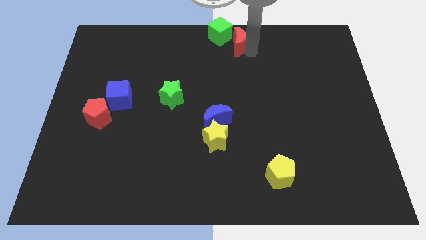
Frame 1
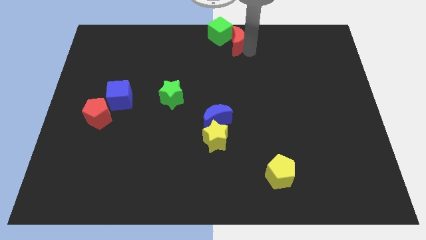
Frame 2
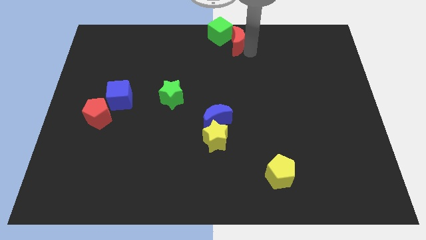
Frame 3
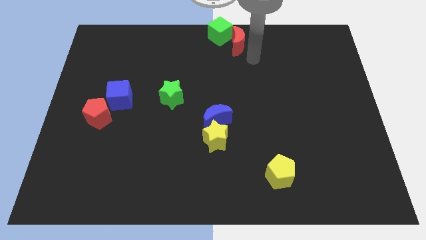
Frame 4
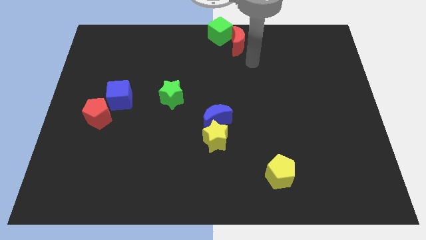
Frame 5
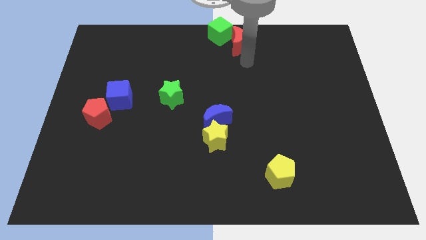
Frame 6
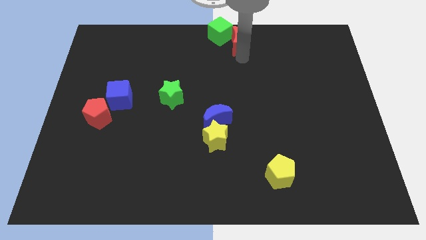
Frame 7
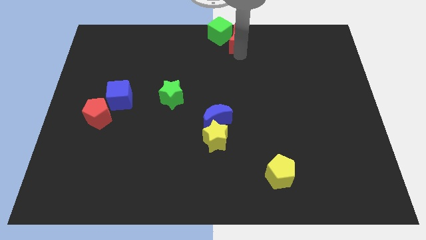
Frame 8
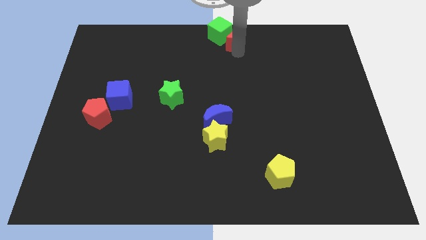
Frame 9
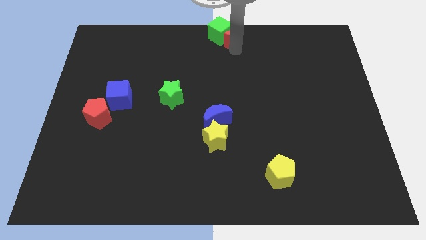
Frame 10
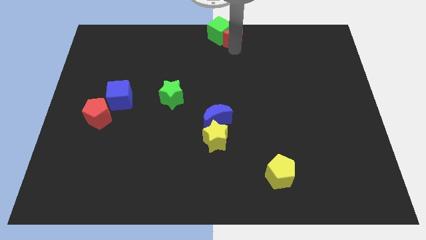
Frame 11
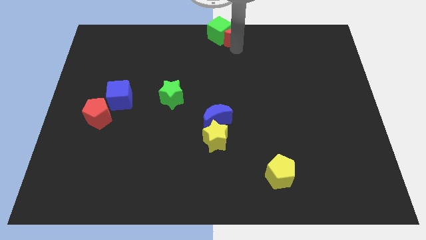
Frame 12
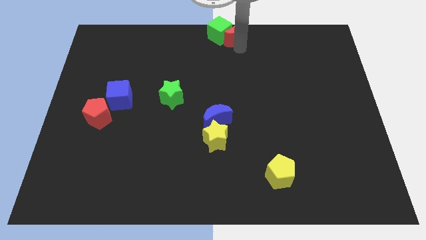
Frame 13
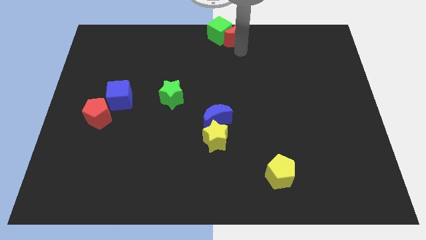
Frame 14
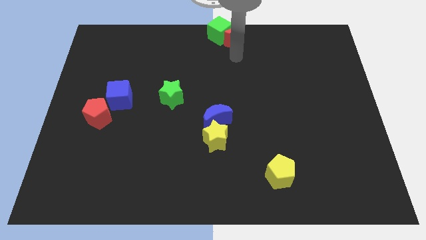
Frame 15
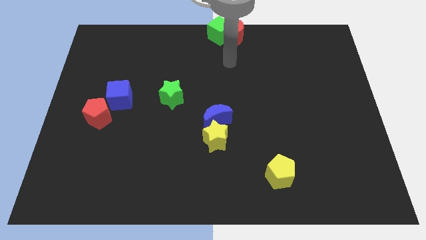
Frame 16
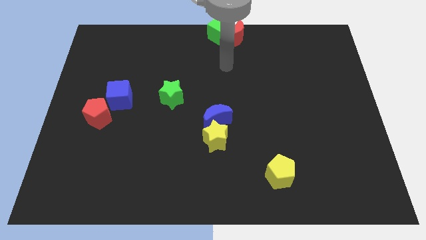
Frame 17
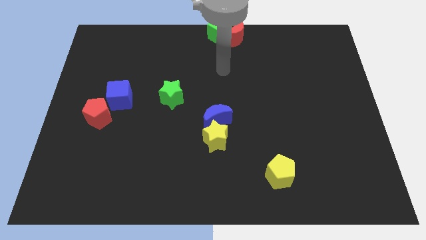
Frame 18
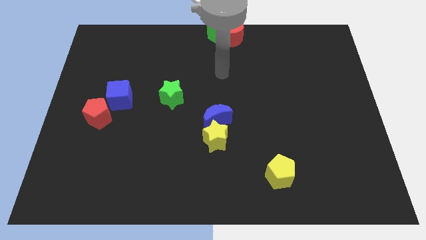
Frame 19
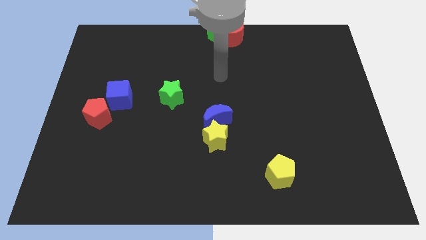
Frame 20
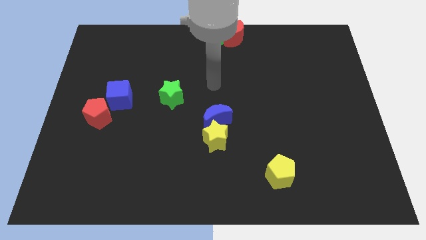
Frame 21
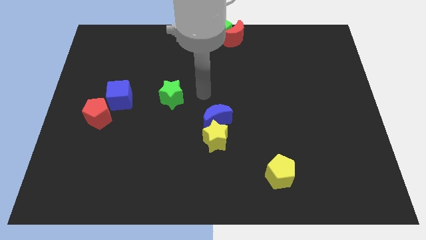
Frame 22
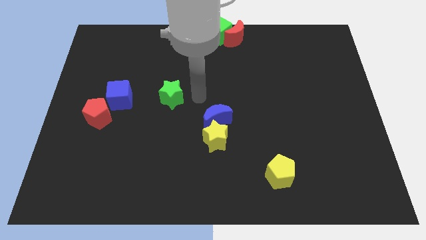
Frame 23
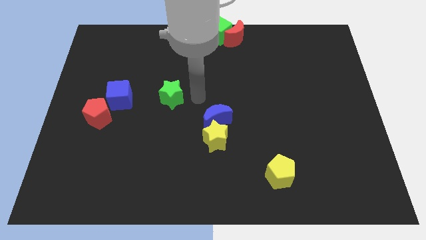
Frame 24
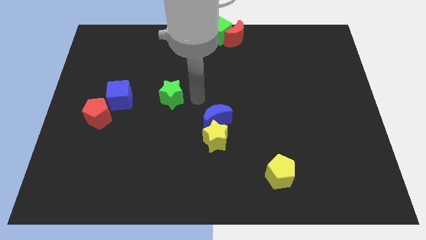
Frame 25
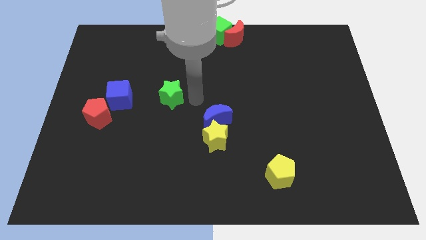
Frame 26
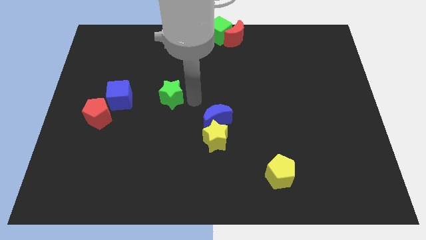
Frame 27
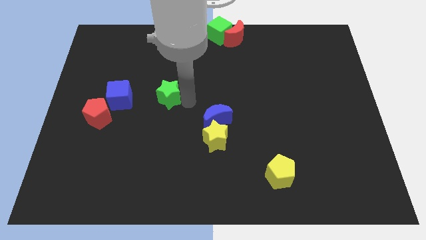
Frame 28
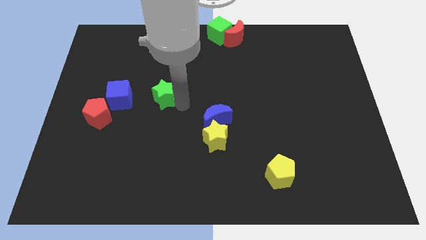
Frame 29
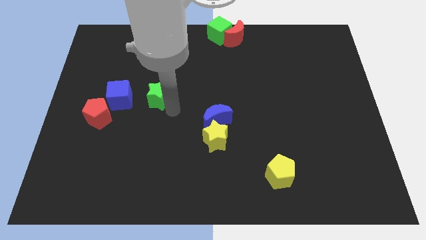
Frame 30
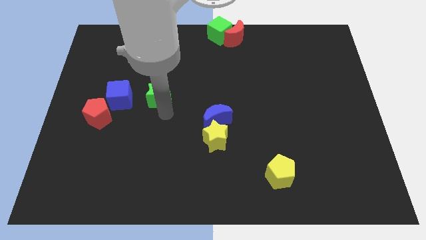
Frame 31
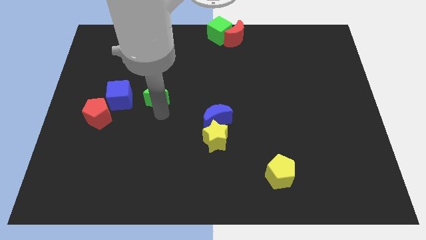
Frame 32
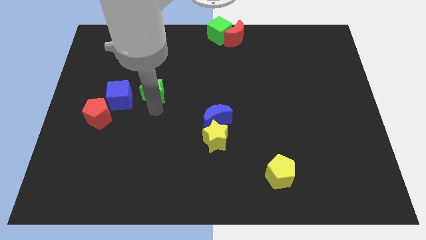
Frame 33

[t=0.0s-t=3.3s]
place the green star right to the blue cube

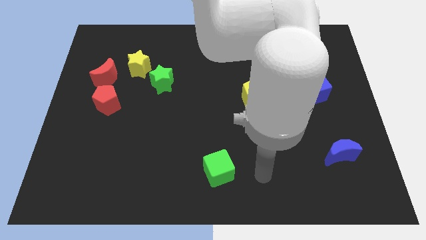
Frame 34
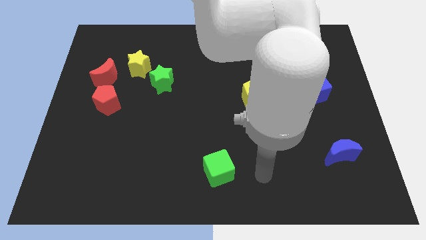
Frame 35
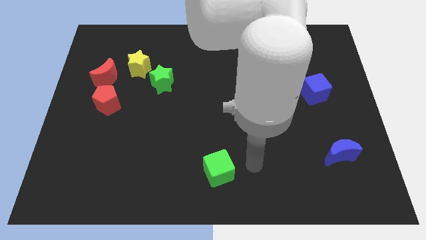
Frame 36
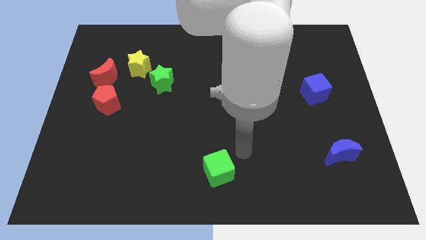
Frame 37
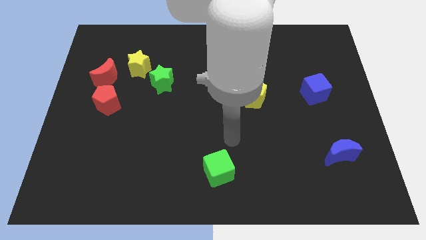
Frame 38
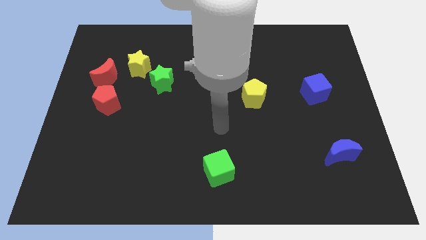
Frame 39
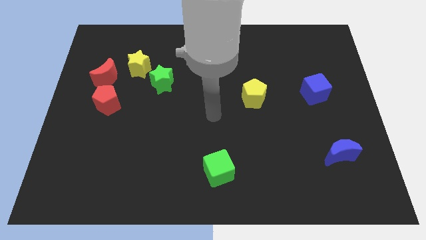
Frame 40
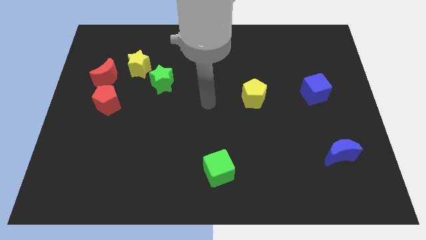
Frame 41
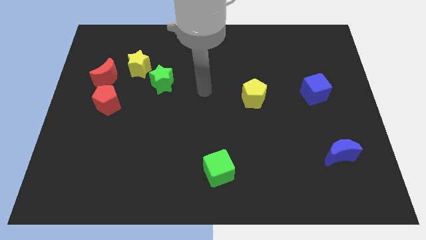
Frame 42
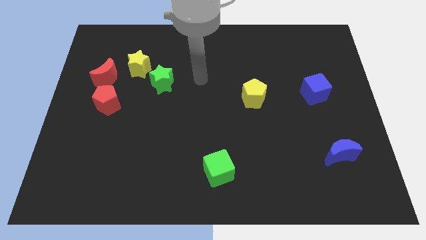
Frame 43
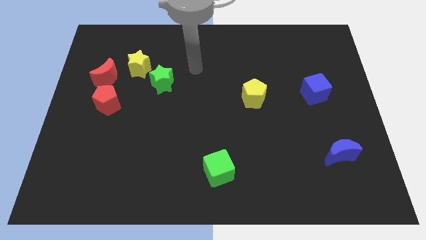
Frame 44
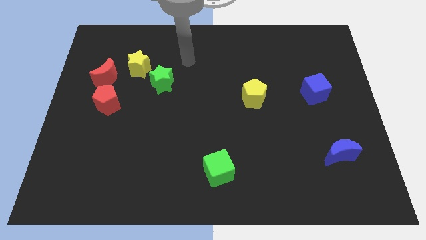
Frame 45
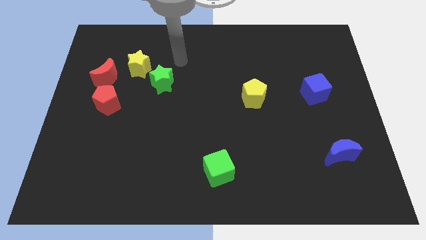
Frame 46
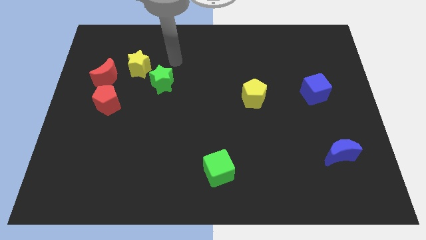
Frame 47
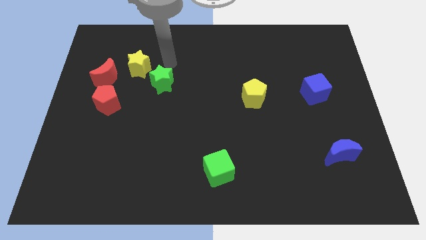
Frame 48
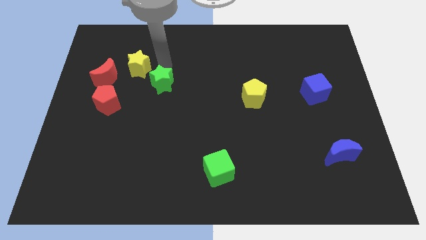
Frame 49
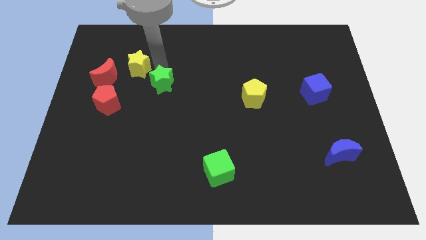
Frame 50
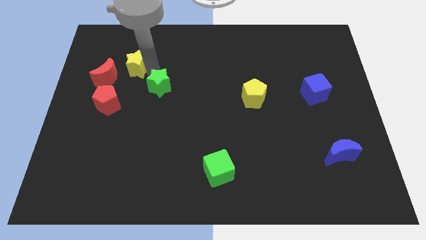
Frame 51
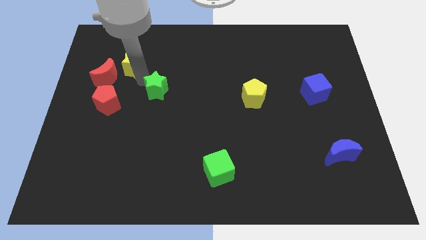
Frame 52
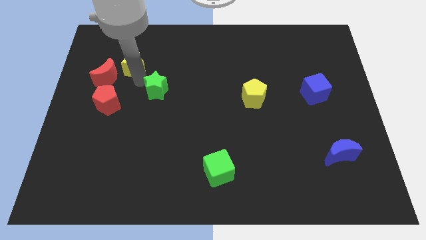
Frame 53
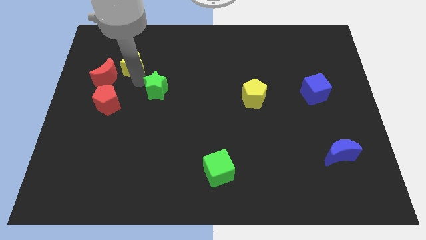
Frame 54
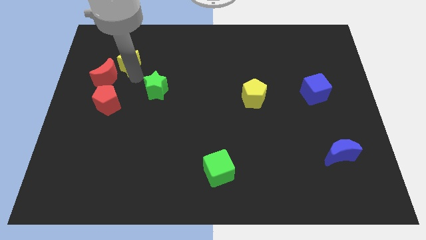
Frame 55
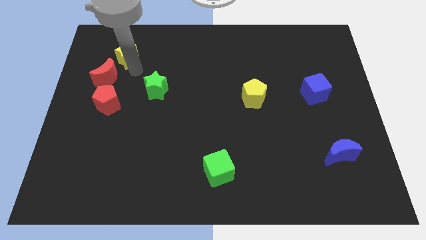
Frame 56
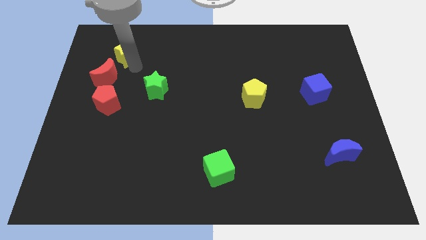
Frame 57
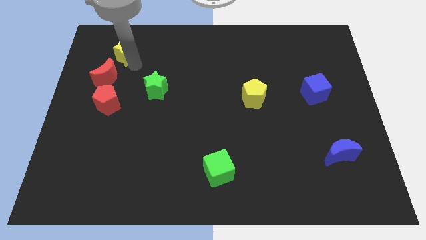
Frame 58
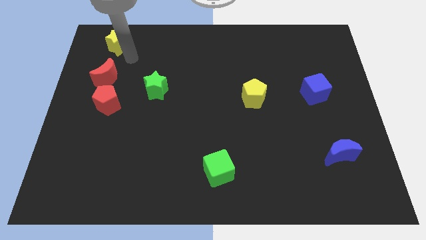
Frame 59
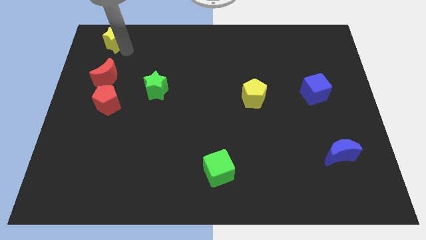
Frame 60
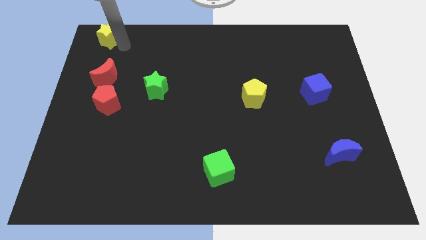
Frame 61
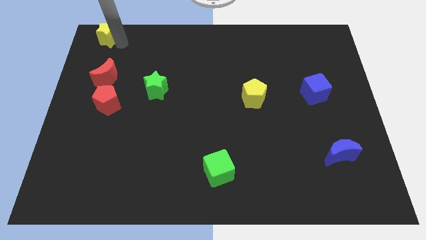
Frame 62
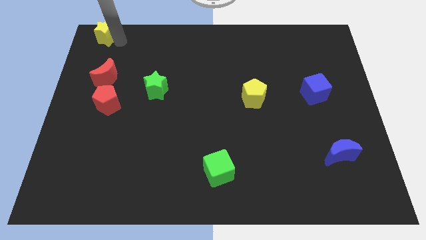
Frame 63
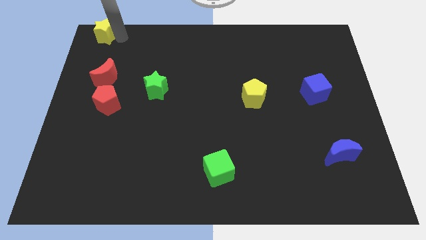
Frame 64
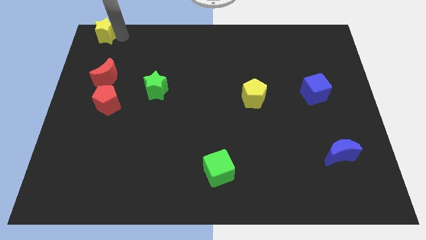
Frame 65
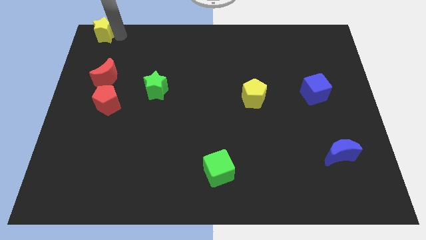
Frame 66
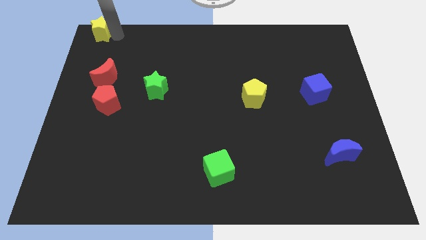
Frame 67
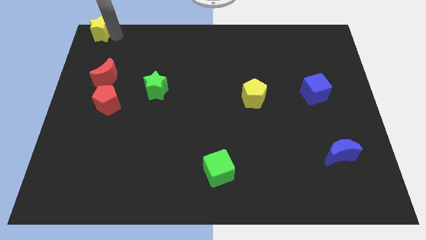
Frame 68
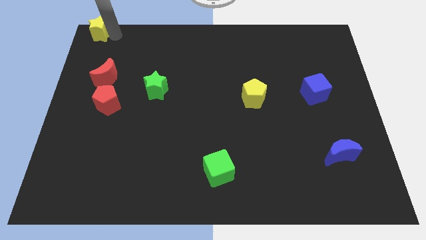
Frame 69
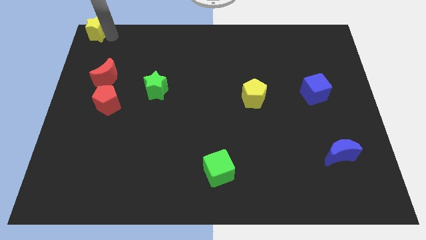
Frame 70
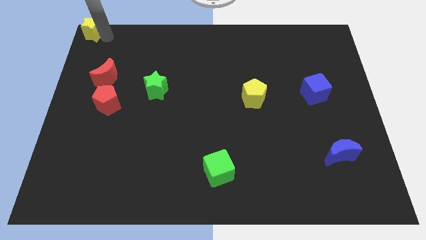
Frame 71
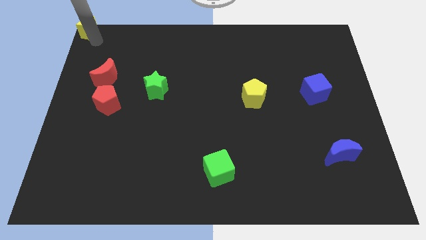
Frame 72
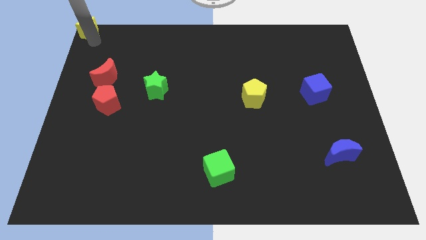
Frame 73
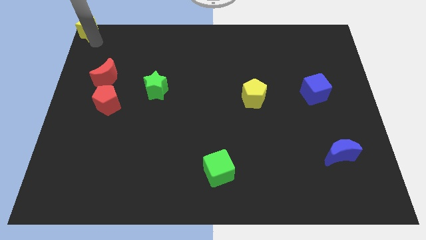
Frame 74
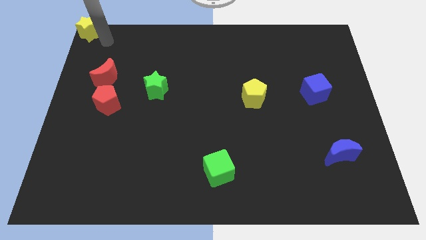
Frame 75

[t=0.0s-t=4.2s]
place the yellow star to the top left corner of the board

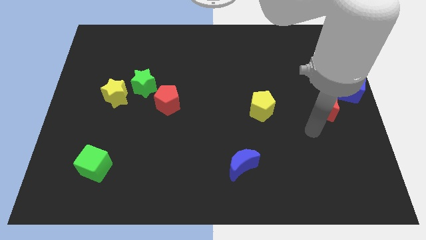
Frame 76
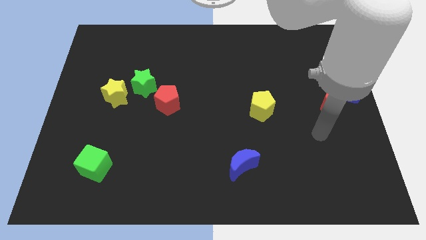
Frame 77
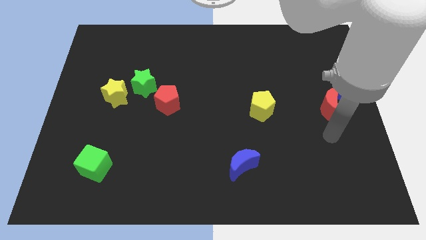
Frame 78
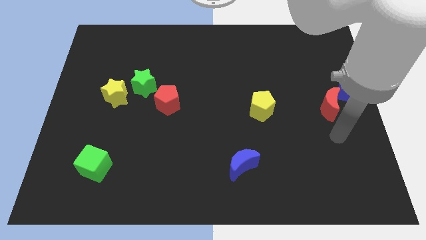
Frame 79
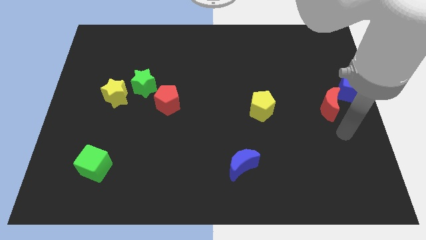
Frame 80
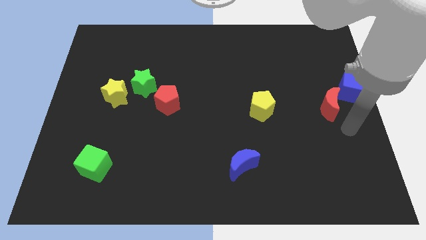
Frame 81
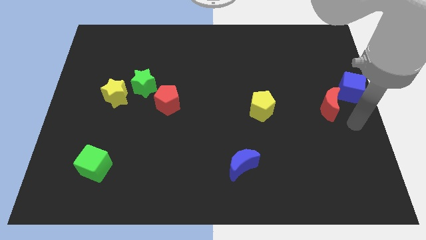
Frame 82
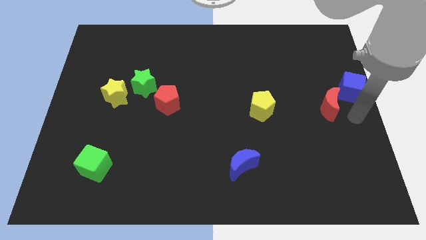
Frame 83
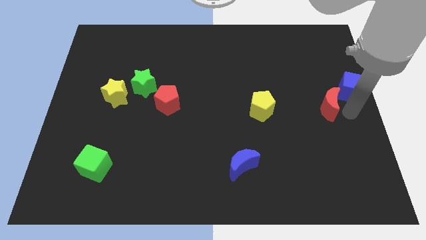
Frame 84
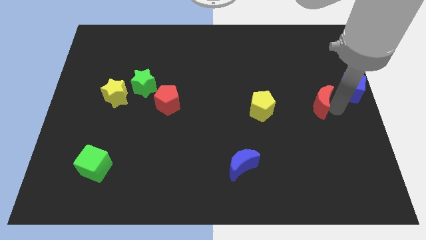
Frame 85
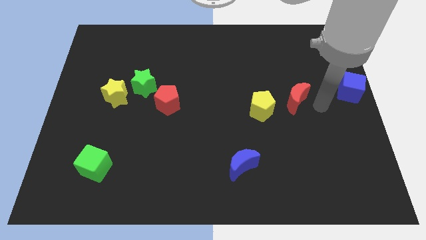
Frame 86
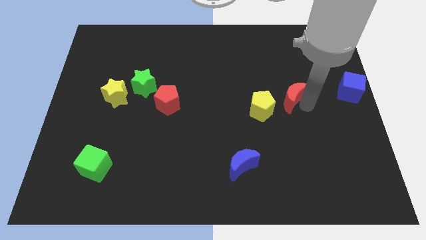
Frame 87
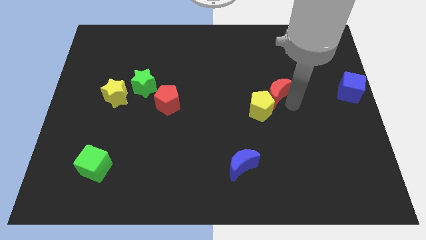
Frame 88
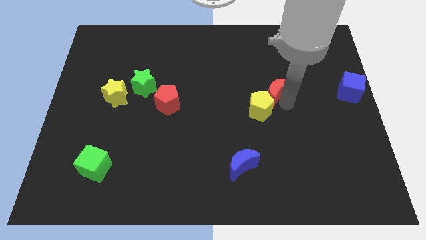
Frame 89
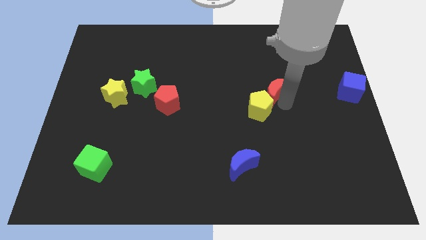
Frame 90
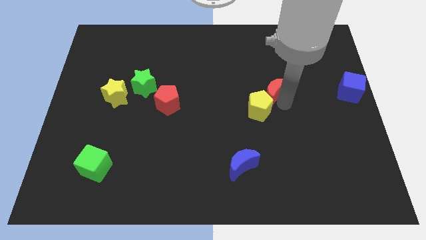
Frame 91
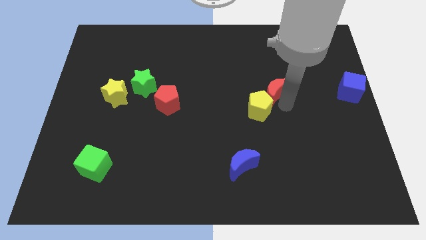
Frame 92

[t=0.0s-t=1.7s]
move the red moon into the top right of the yellow pentagon
